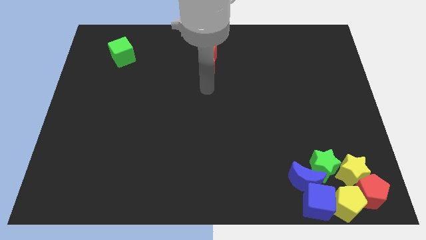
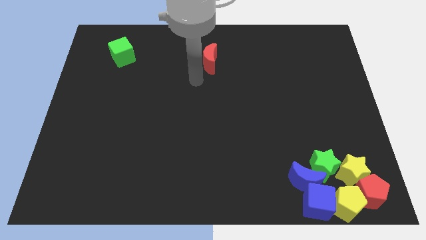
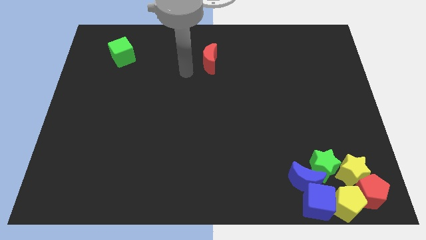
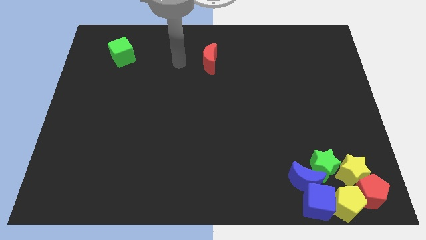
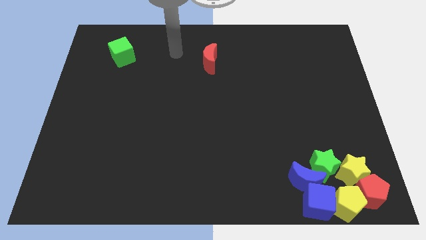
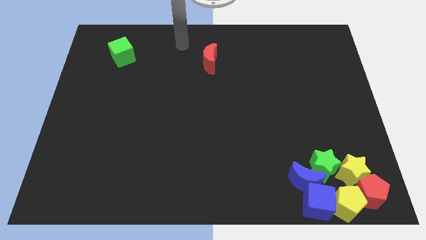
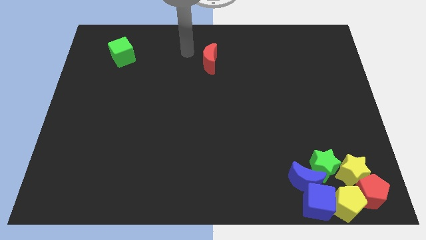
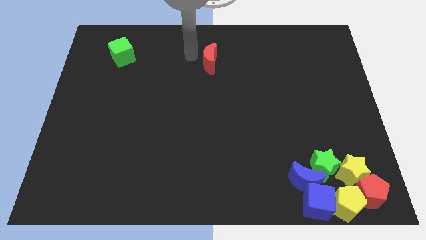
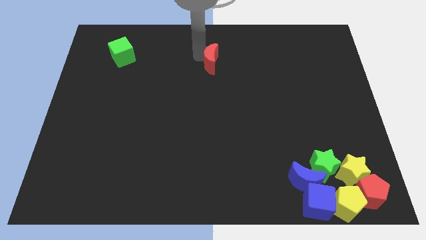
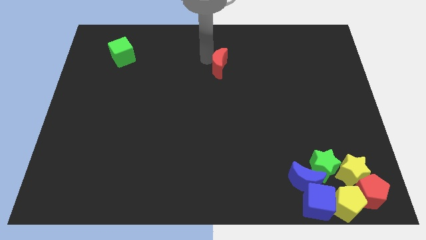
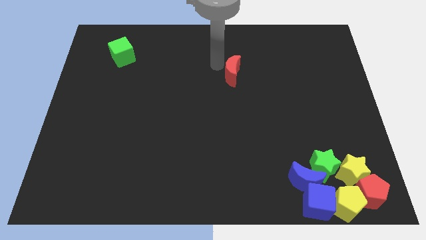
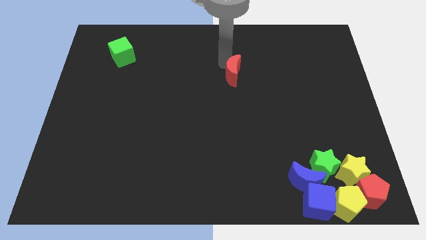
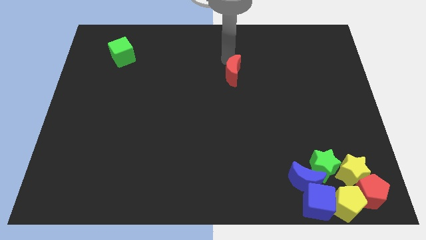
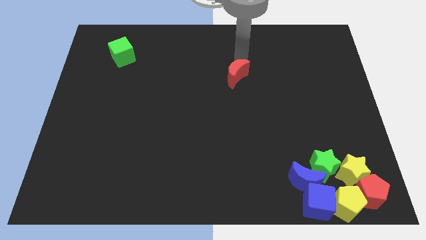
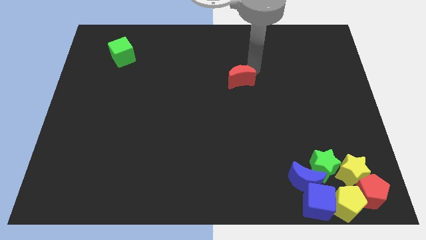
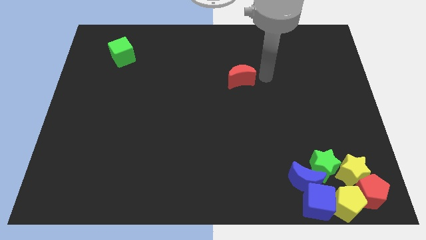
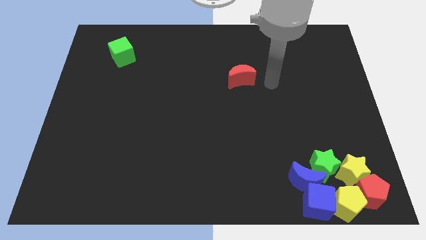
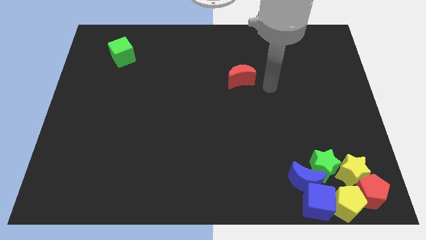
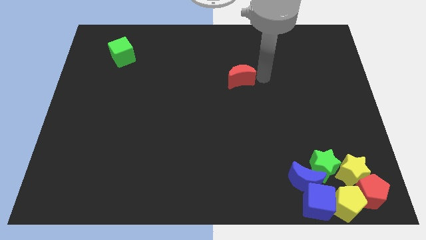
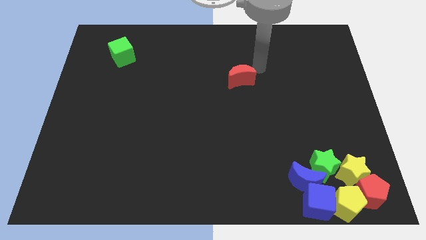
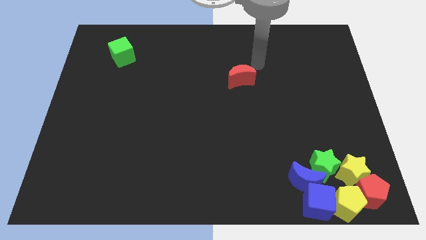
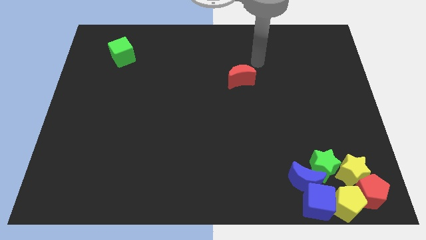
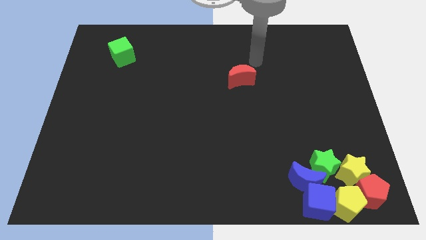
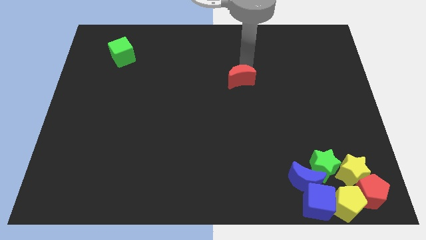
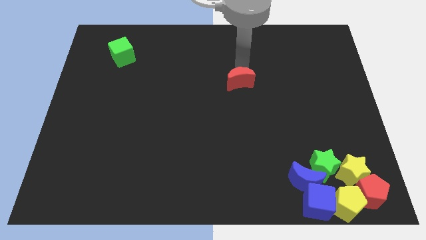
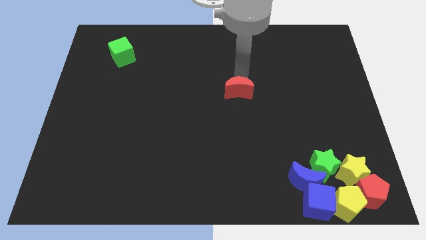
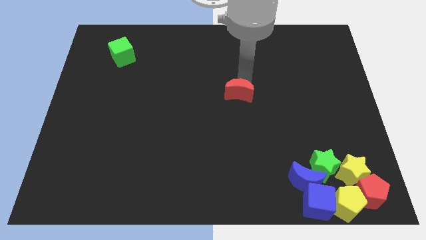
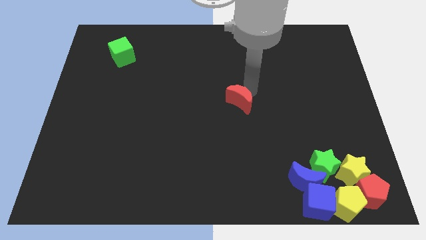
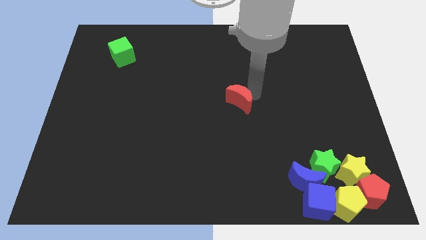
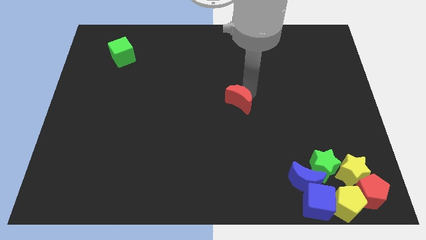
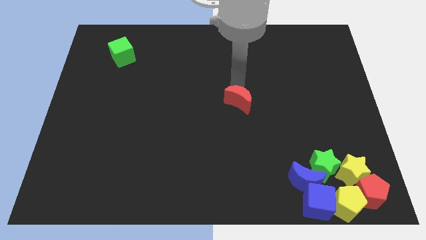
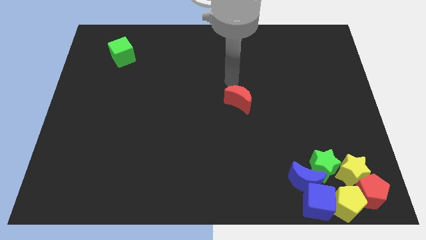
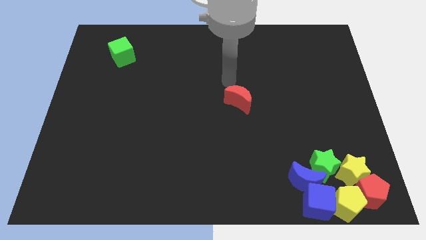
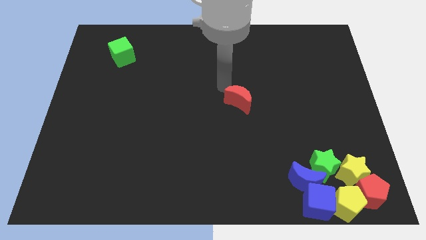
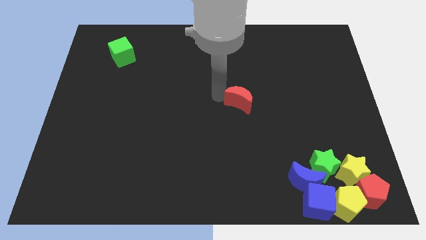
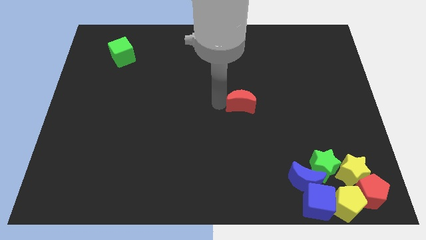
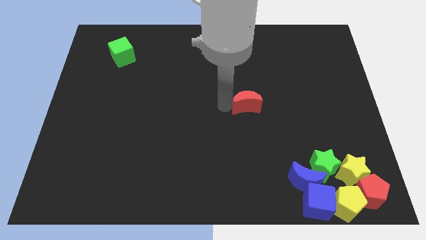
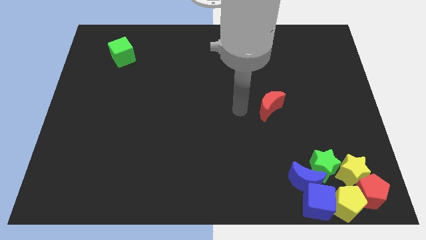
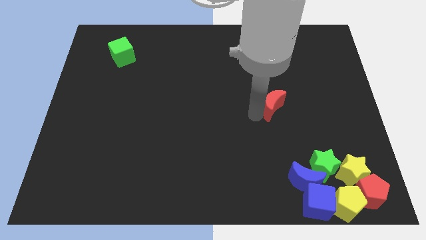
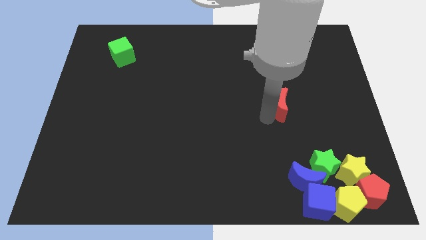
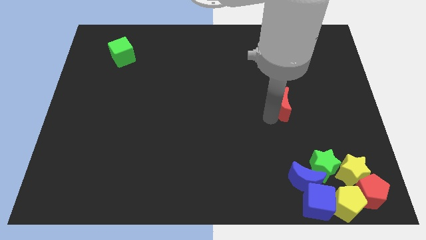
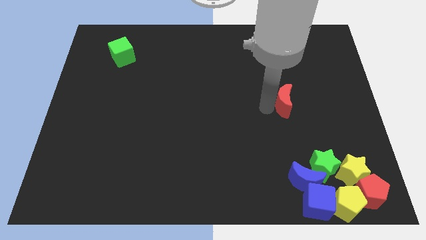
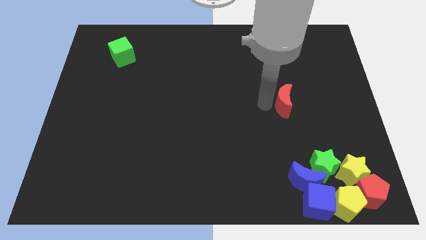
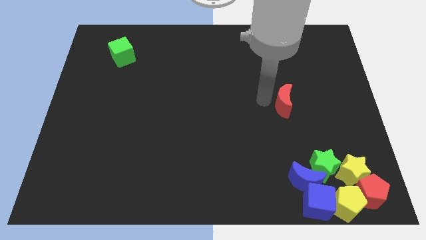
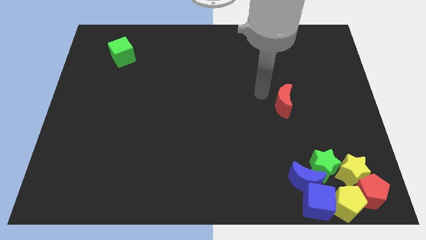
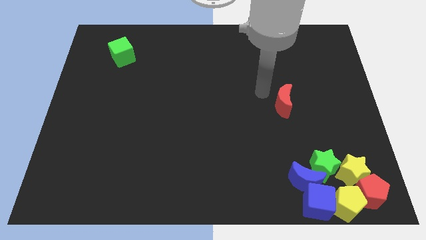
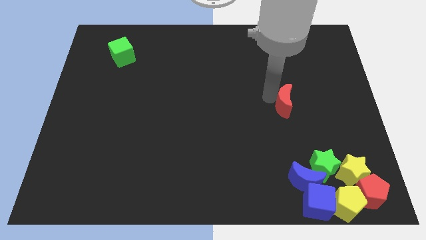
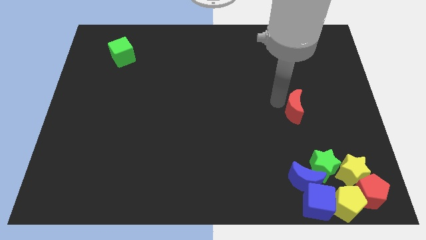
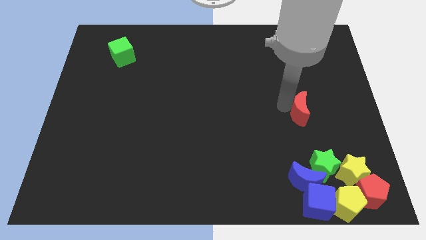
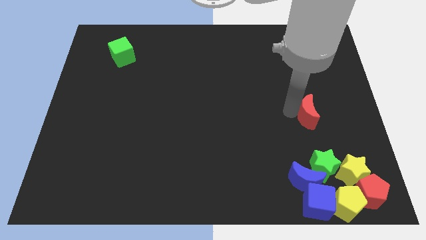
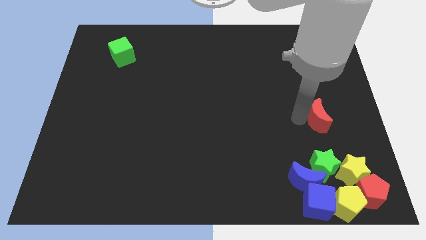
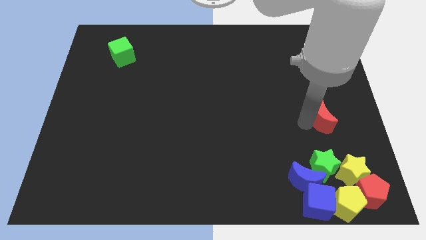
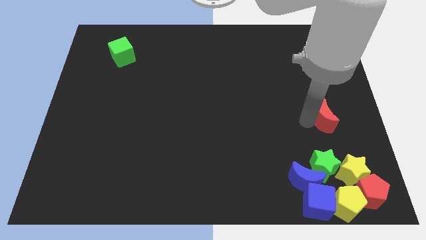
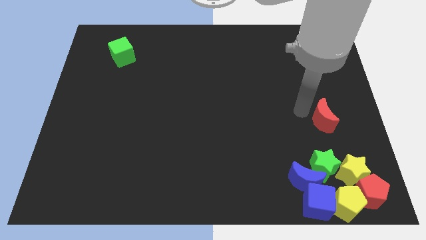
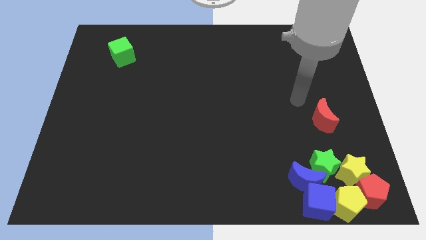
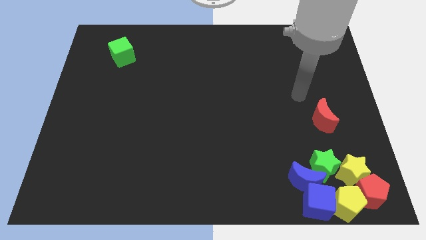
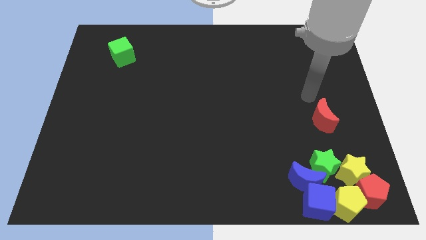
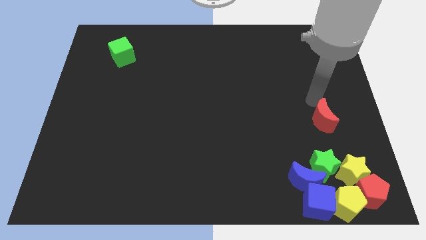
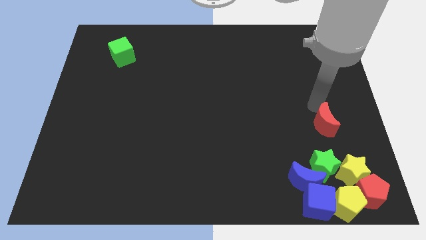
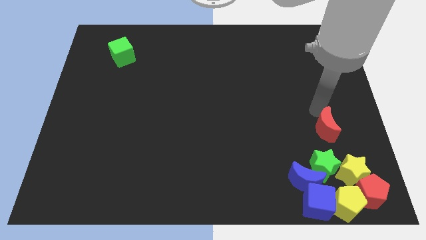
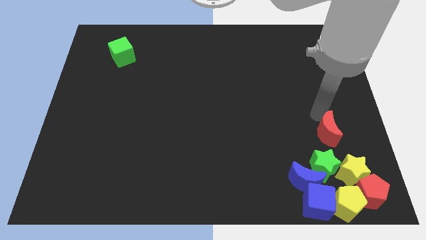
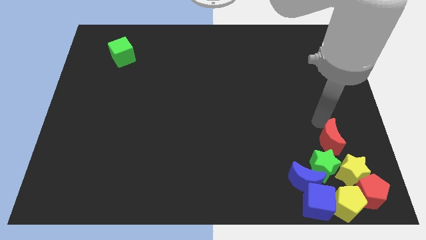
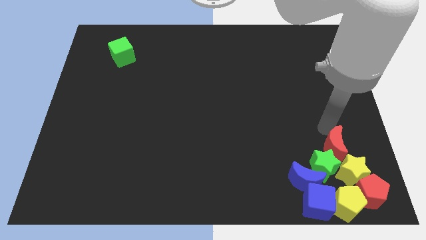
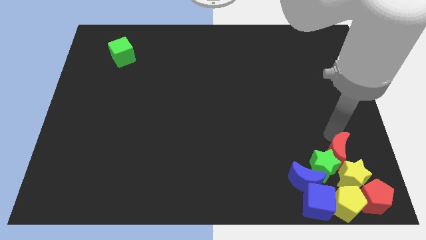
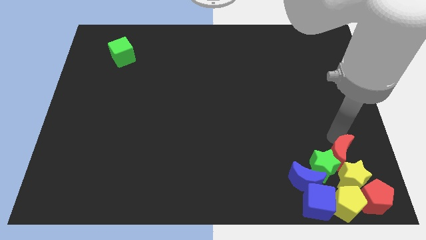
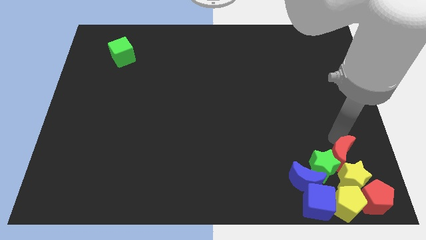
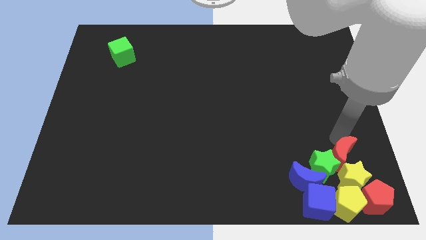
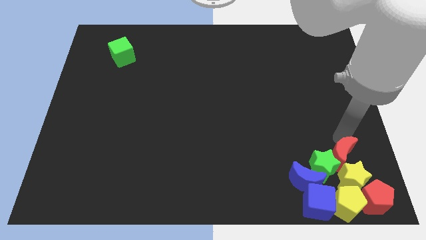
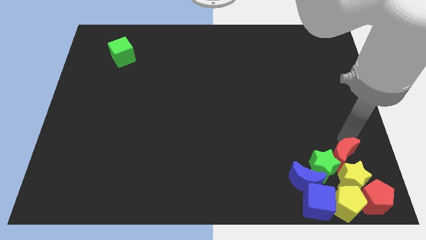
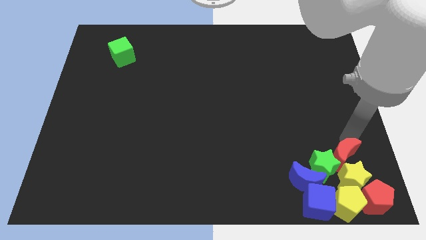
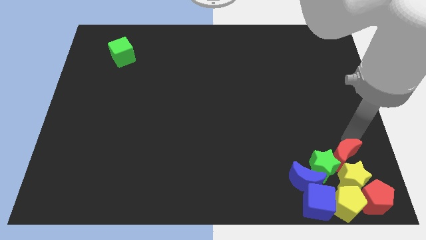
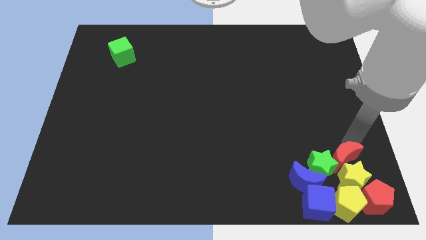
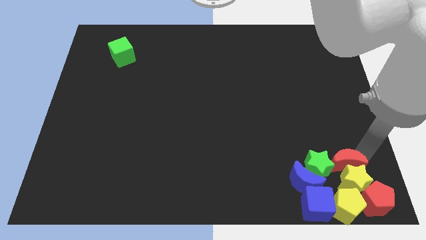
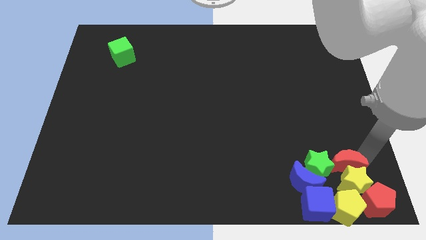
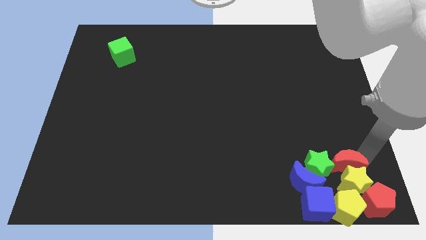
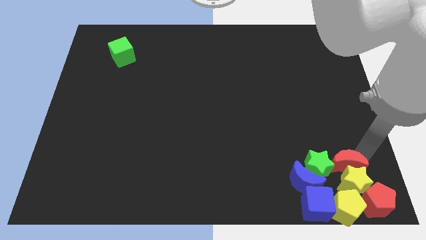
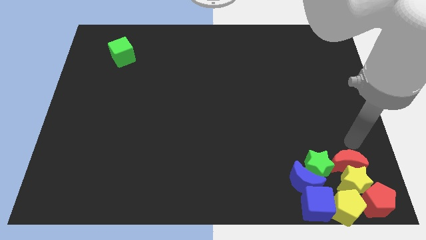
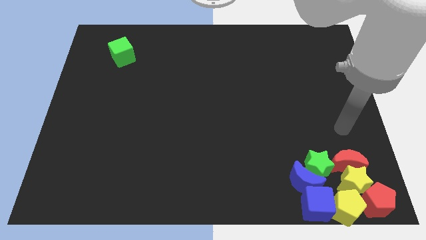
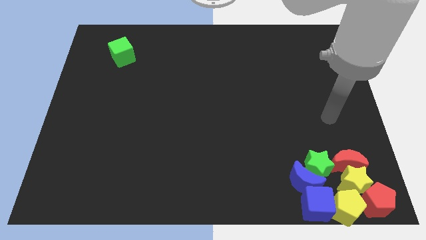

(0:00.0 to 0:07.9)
push the red crescent into the group of blocks

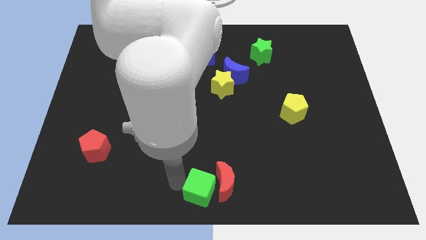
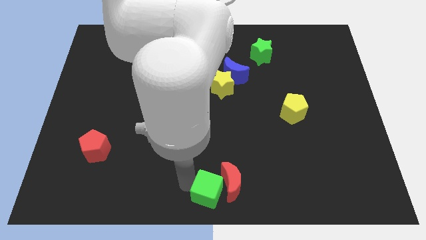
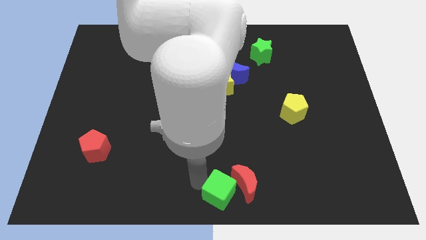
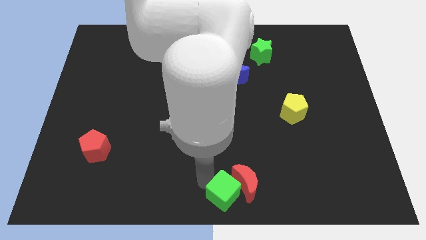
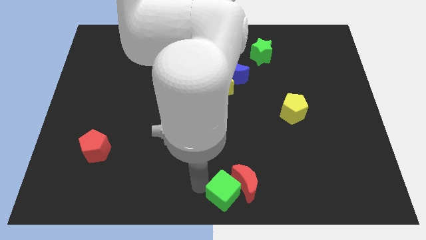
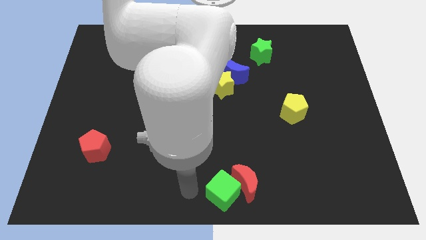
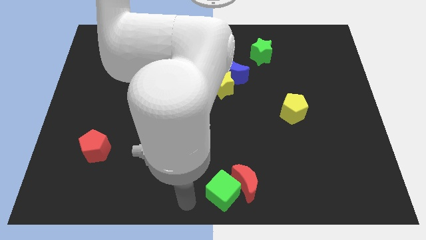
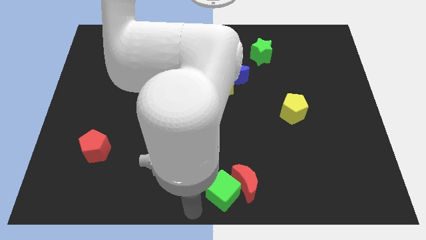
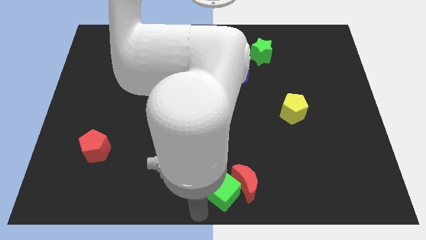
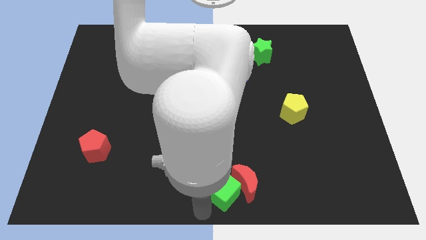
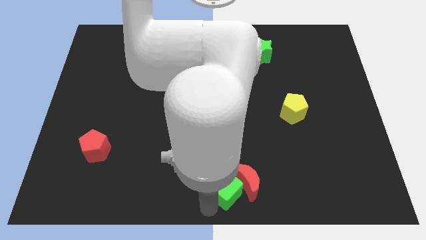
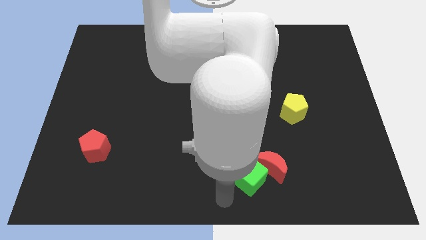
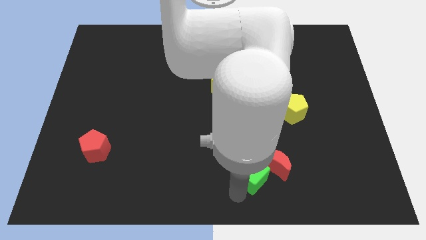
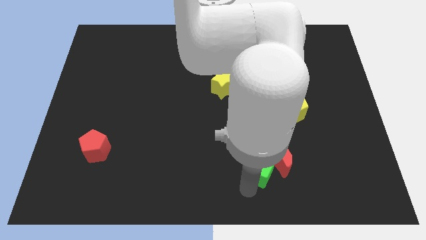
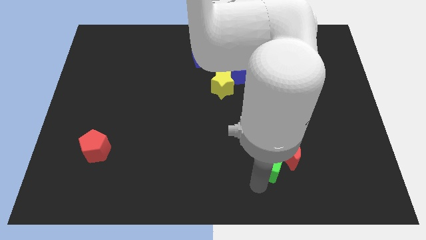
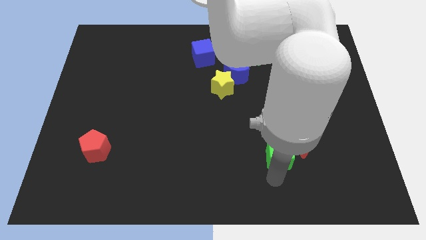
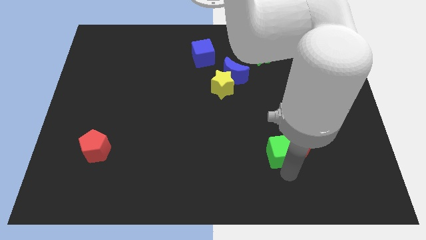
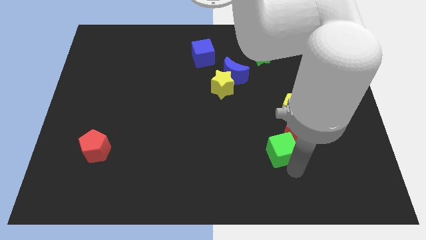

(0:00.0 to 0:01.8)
push the green cube into the red crescent
